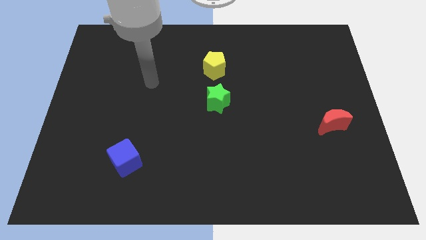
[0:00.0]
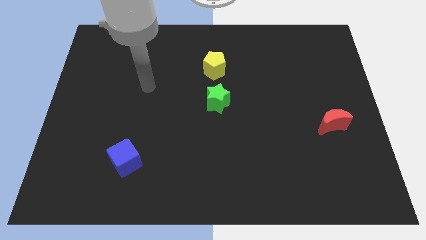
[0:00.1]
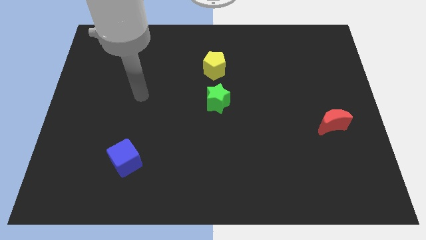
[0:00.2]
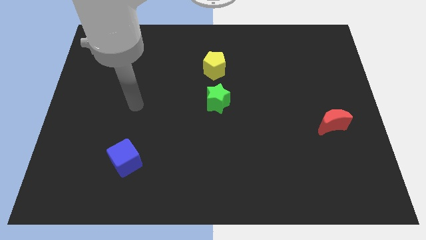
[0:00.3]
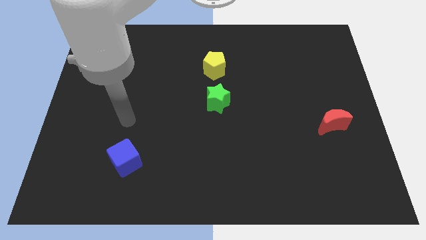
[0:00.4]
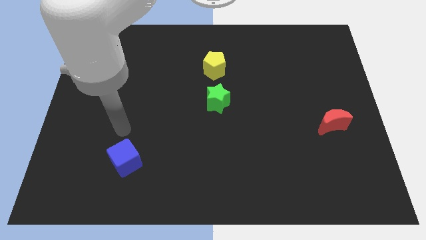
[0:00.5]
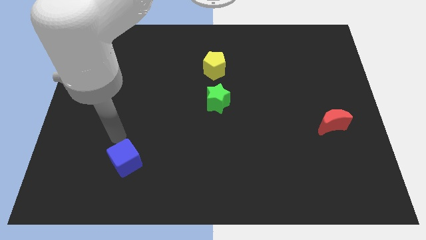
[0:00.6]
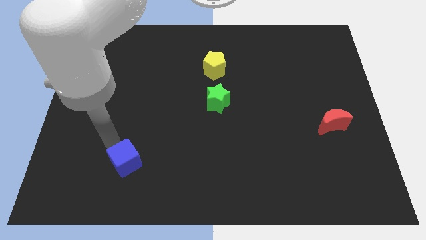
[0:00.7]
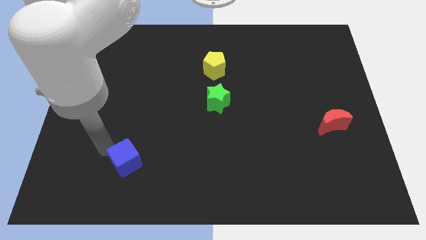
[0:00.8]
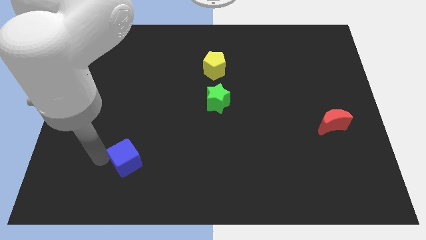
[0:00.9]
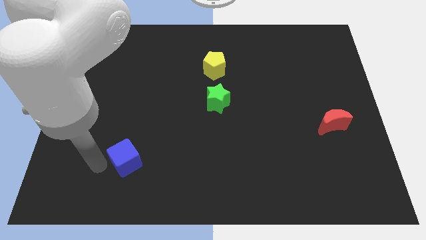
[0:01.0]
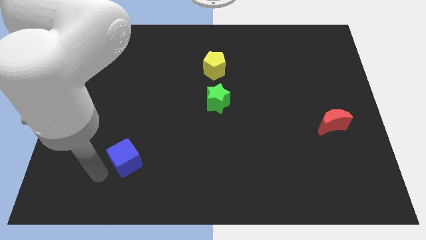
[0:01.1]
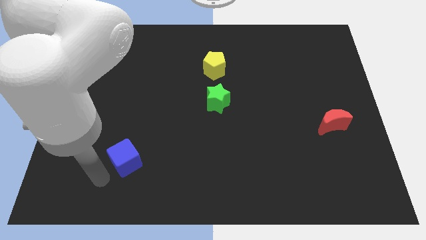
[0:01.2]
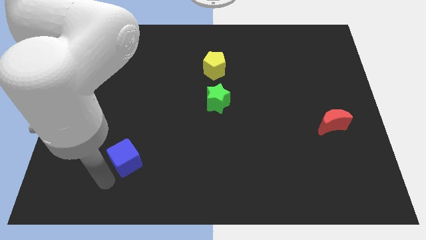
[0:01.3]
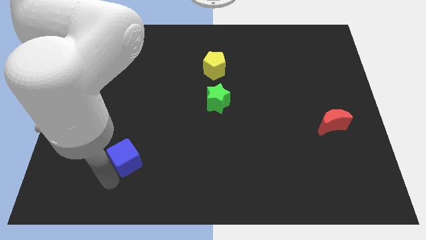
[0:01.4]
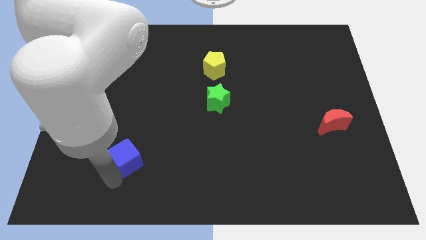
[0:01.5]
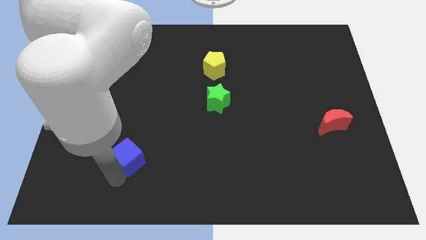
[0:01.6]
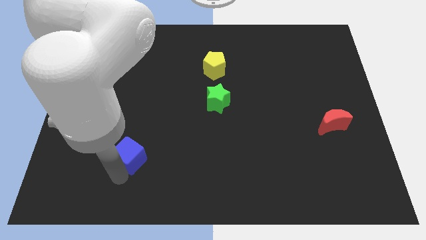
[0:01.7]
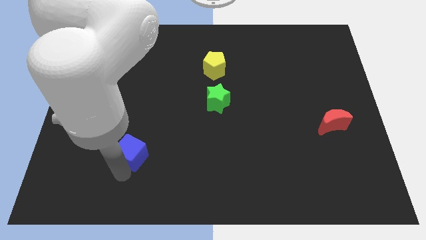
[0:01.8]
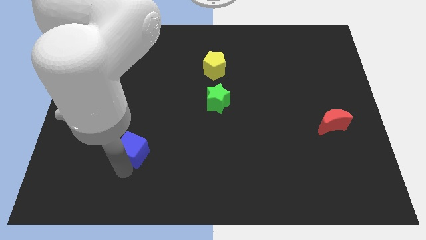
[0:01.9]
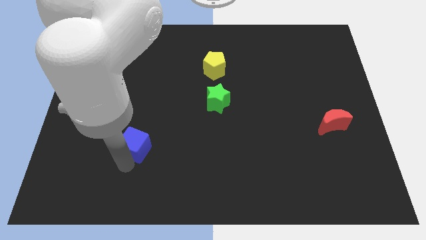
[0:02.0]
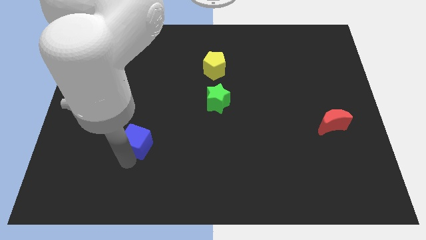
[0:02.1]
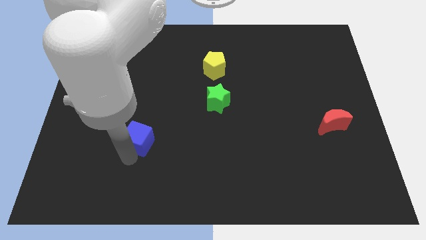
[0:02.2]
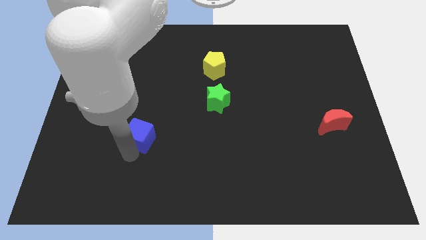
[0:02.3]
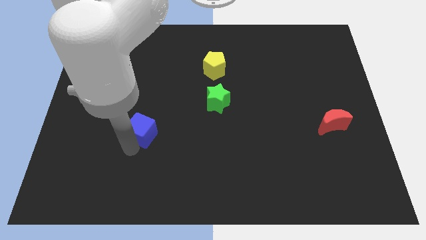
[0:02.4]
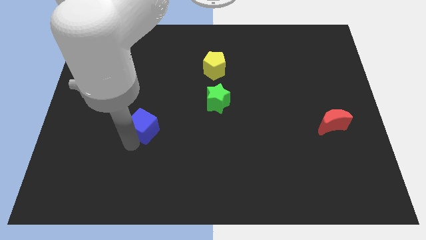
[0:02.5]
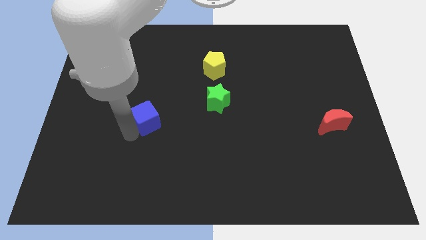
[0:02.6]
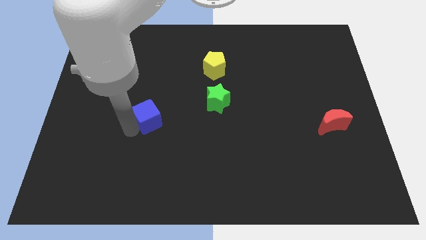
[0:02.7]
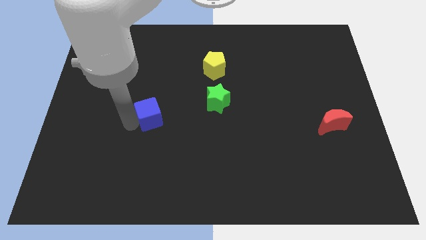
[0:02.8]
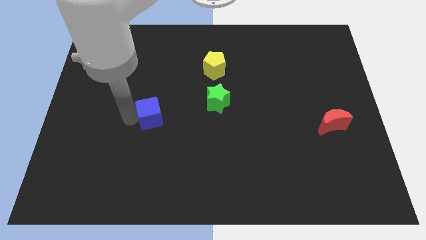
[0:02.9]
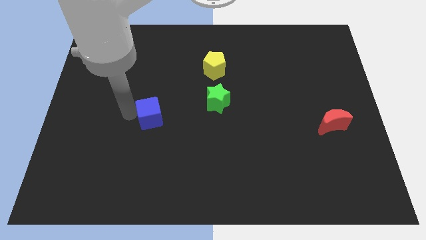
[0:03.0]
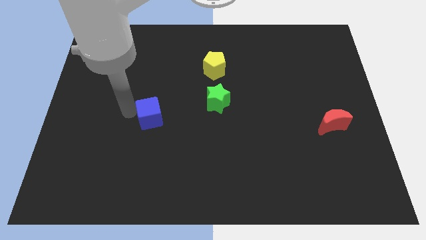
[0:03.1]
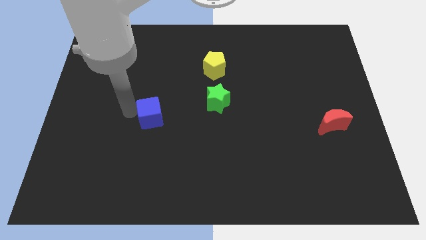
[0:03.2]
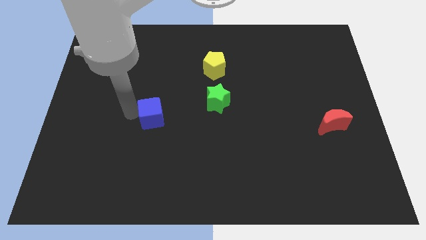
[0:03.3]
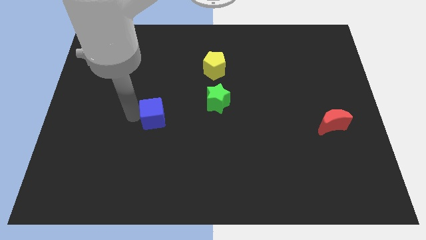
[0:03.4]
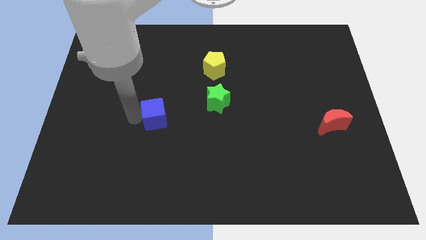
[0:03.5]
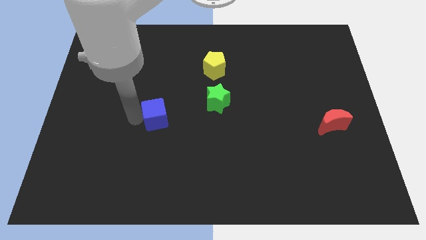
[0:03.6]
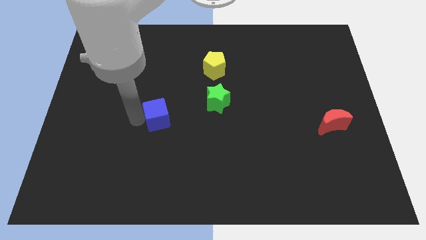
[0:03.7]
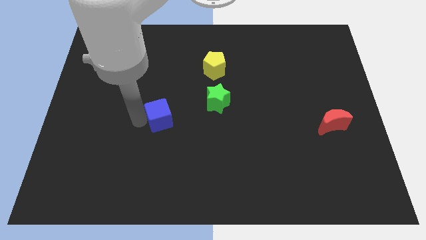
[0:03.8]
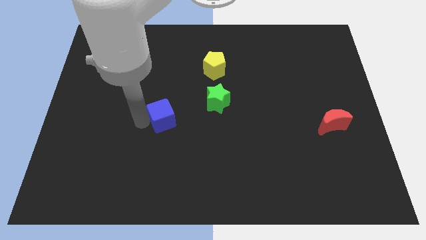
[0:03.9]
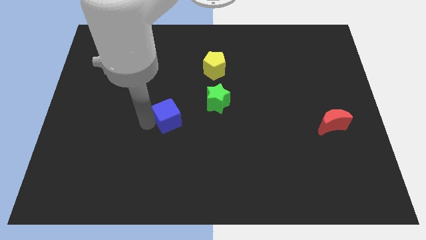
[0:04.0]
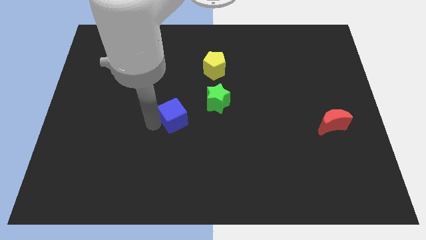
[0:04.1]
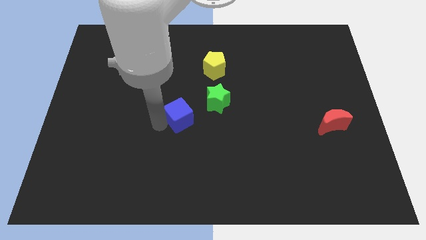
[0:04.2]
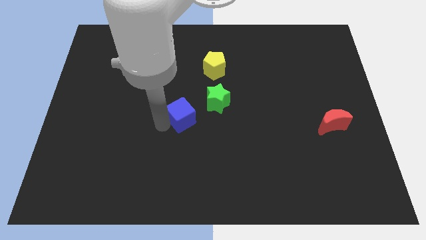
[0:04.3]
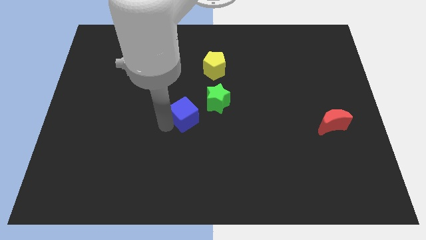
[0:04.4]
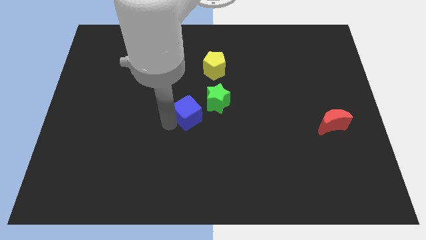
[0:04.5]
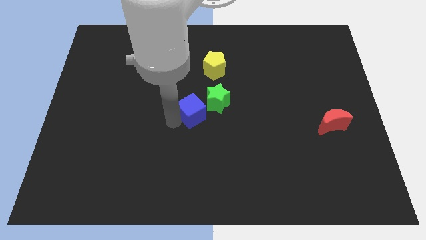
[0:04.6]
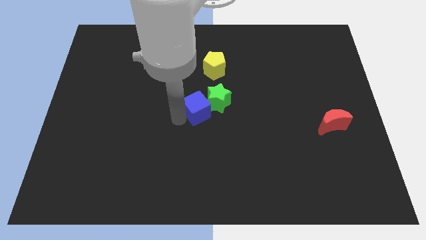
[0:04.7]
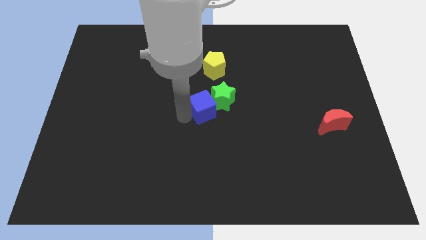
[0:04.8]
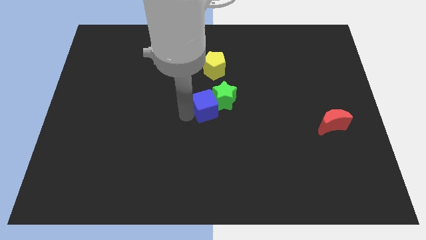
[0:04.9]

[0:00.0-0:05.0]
move the cube towards the green star

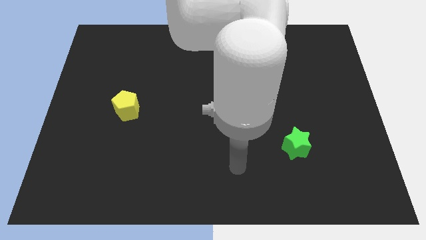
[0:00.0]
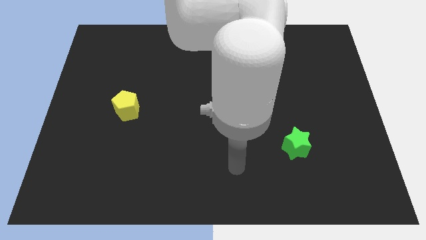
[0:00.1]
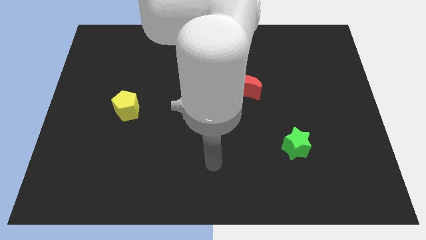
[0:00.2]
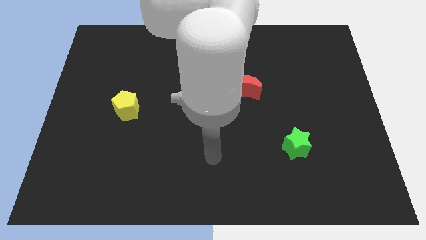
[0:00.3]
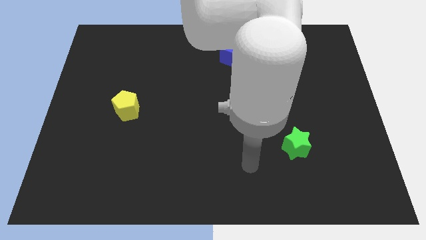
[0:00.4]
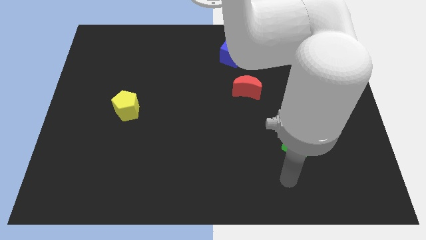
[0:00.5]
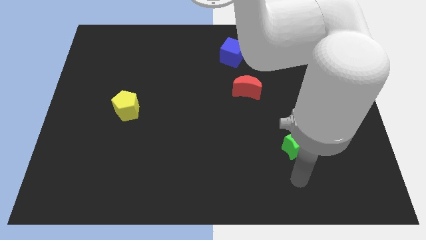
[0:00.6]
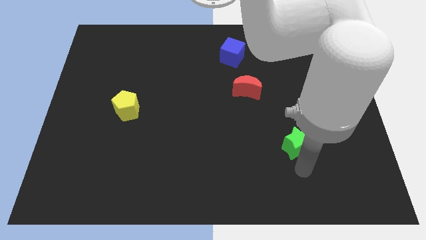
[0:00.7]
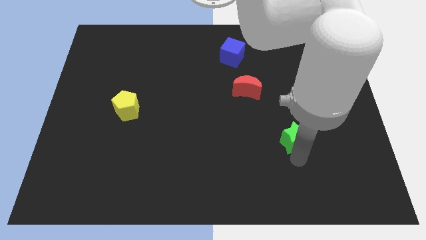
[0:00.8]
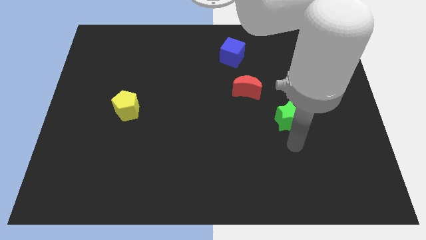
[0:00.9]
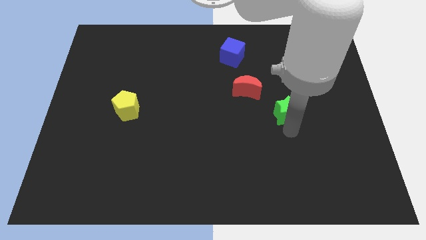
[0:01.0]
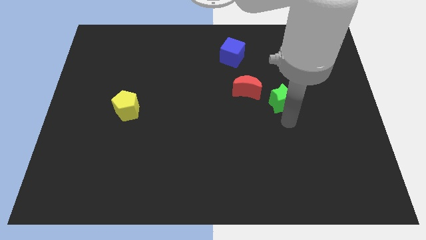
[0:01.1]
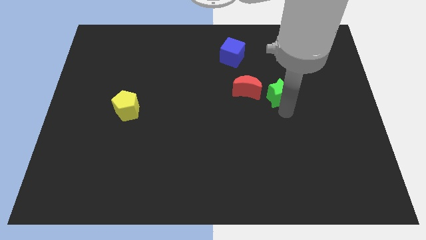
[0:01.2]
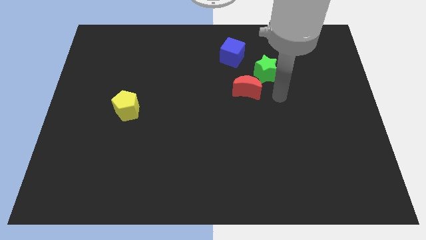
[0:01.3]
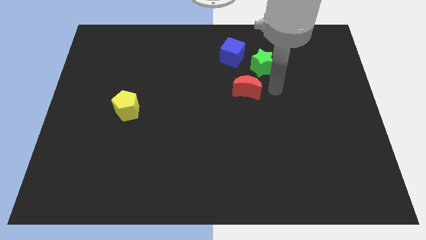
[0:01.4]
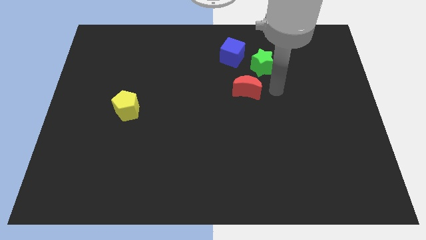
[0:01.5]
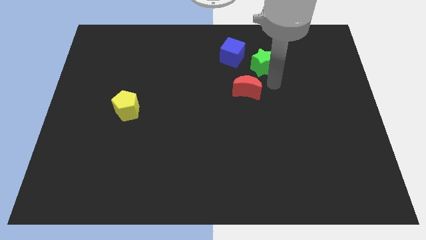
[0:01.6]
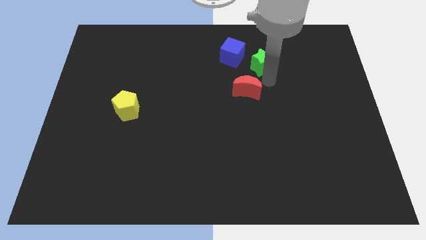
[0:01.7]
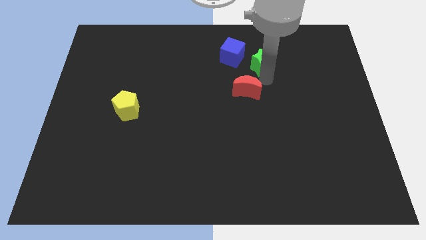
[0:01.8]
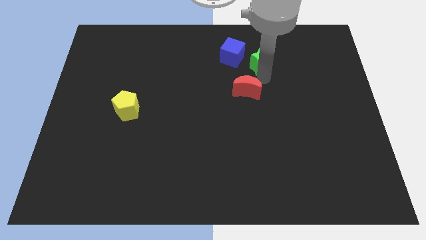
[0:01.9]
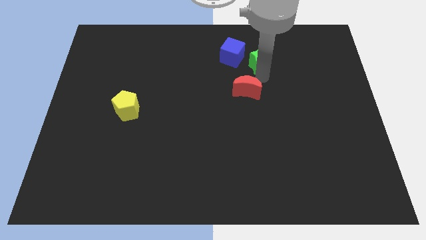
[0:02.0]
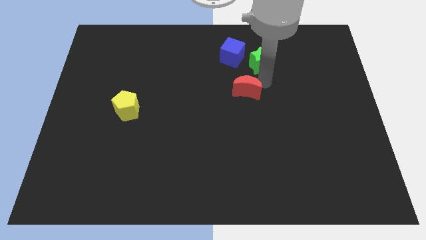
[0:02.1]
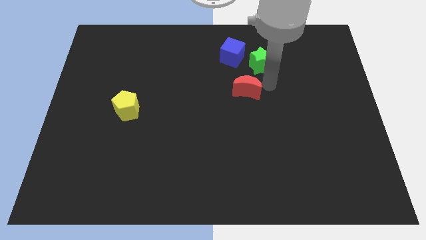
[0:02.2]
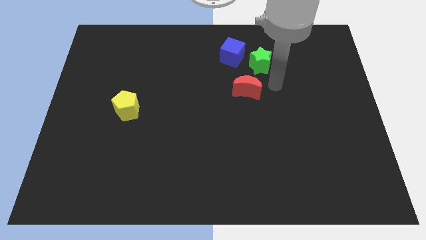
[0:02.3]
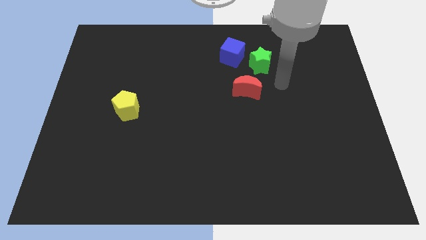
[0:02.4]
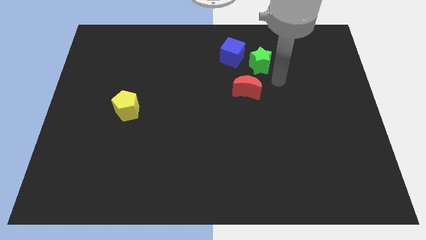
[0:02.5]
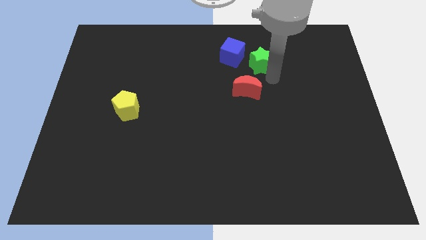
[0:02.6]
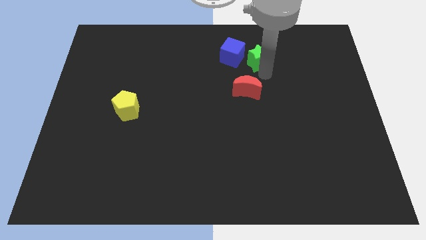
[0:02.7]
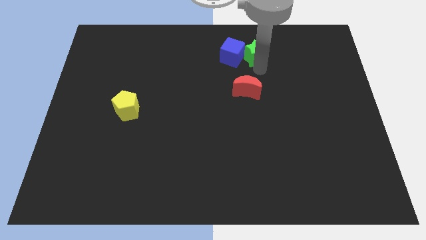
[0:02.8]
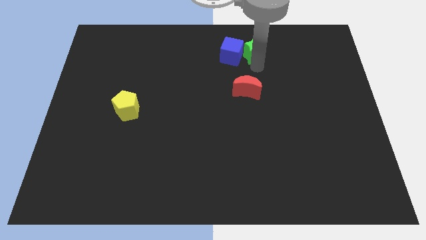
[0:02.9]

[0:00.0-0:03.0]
move the green star to the cube

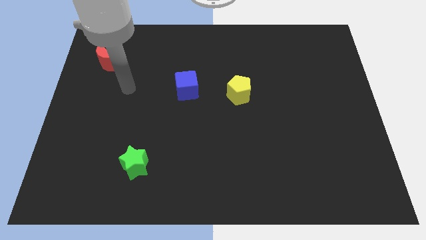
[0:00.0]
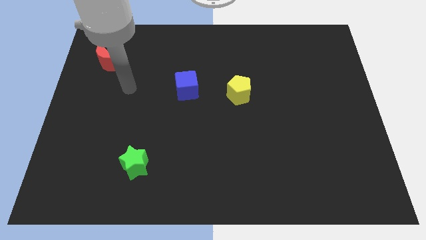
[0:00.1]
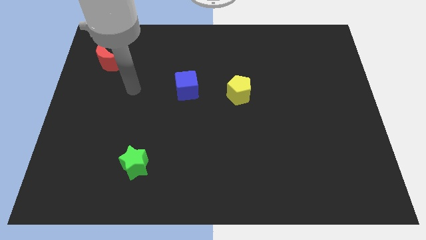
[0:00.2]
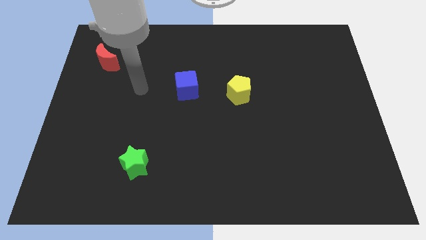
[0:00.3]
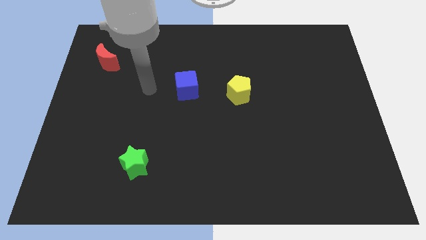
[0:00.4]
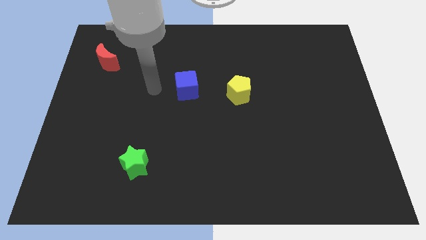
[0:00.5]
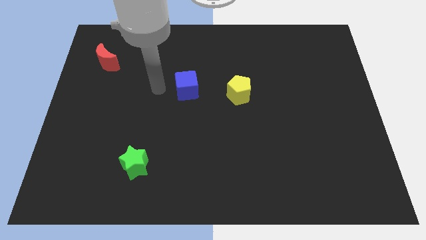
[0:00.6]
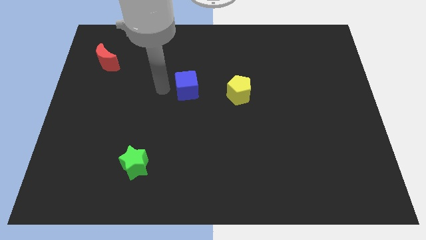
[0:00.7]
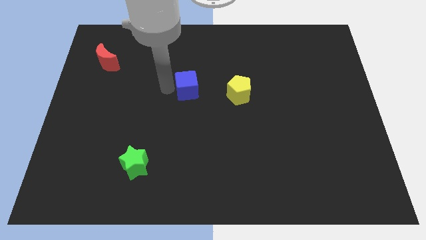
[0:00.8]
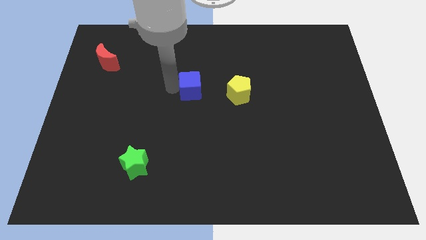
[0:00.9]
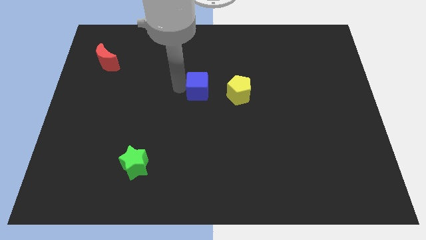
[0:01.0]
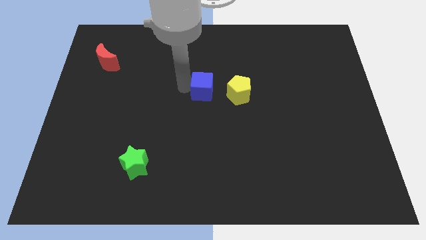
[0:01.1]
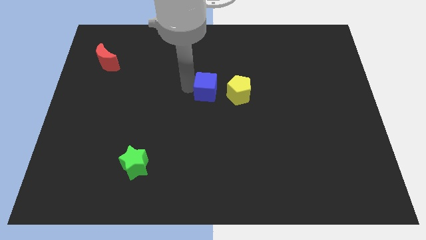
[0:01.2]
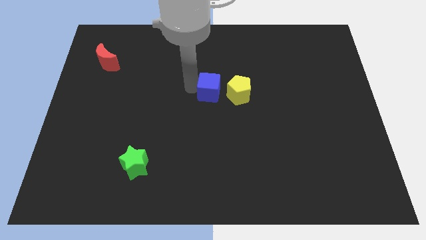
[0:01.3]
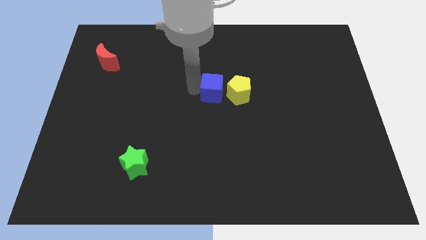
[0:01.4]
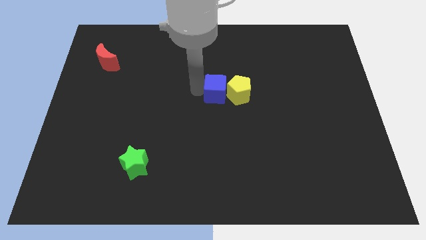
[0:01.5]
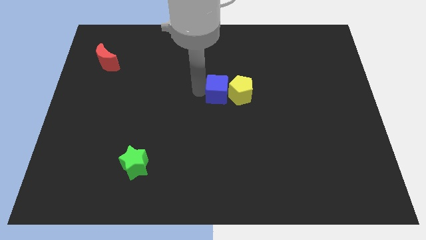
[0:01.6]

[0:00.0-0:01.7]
push the cube close to the yellow pentagon
